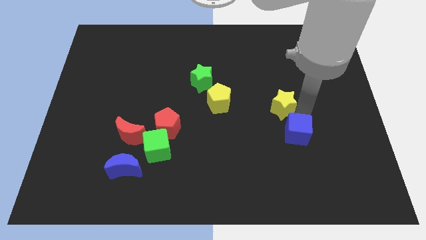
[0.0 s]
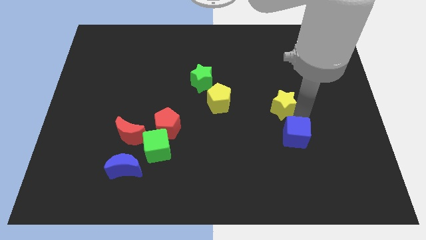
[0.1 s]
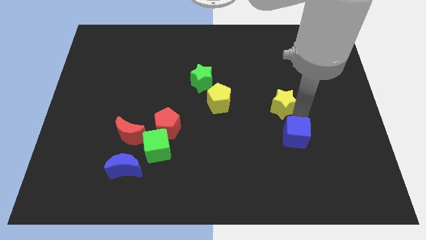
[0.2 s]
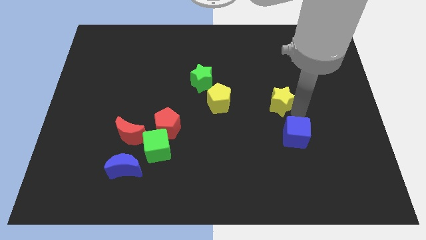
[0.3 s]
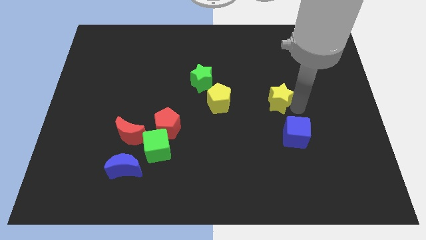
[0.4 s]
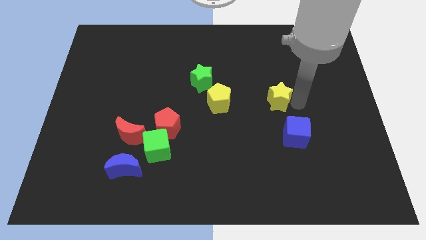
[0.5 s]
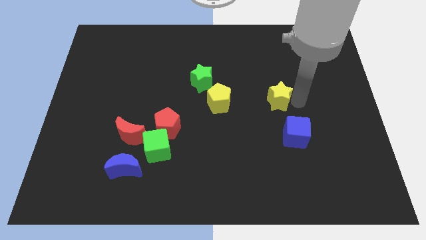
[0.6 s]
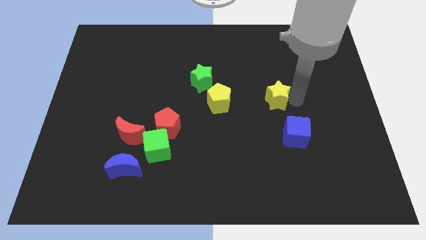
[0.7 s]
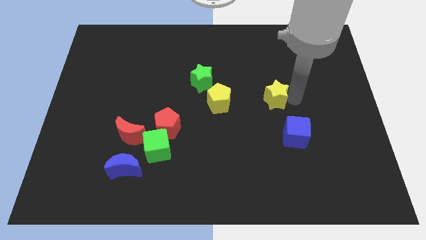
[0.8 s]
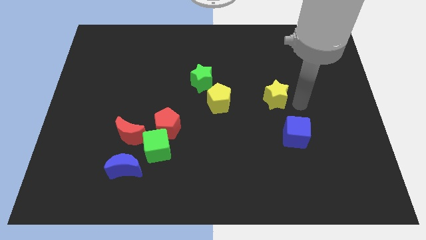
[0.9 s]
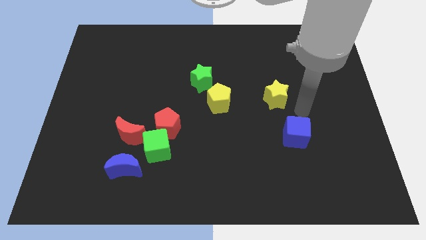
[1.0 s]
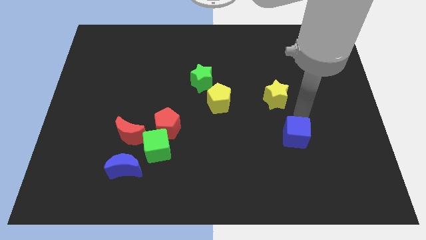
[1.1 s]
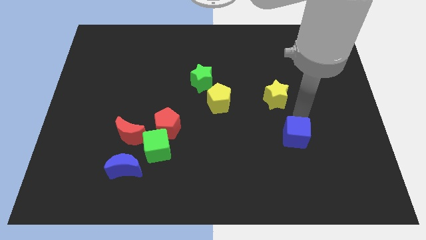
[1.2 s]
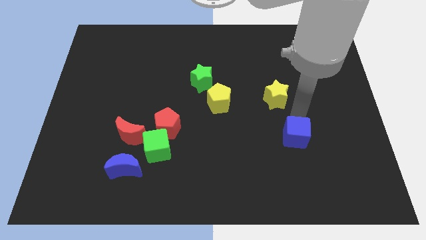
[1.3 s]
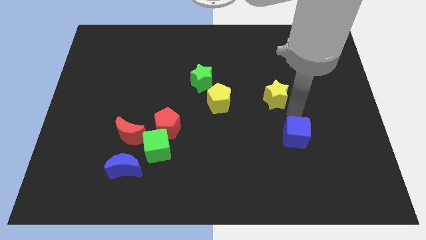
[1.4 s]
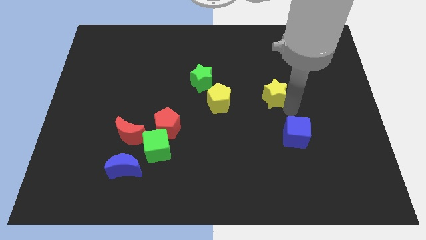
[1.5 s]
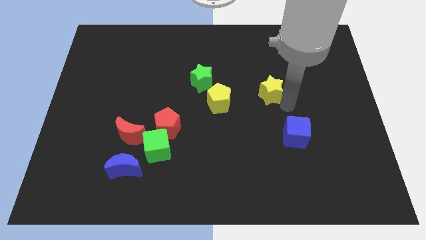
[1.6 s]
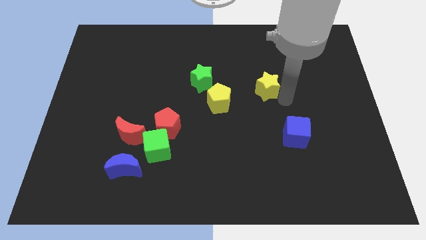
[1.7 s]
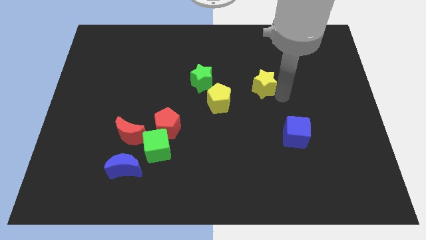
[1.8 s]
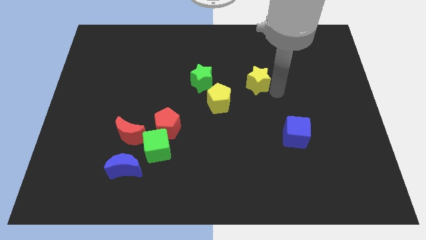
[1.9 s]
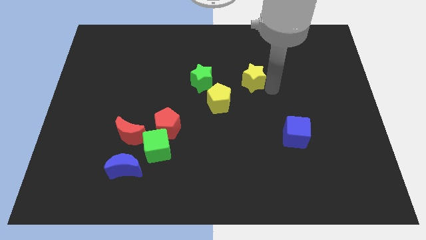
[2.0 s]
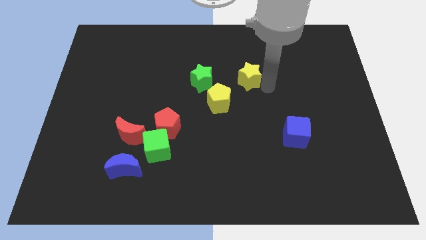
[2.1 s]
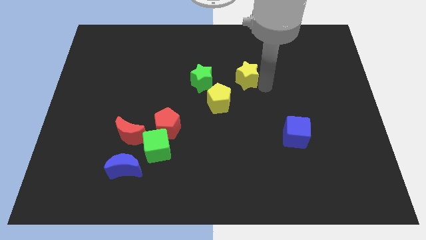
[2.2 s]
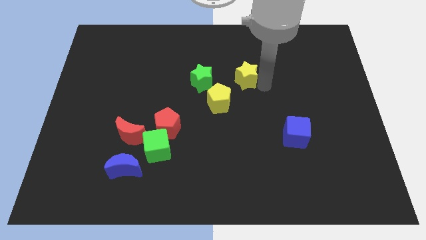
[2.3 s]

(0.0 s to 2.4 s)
push the yellow star to the right of the green star

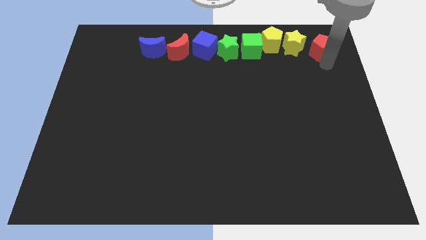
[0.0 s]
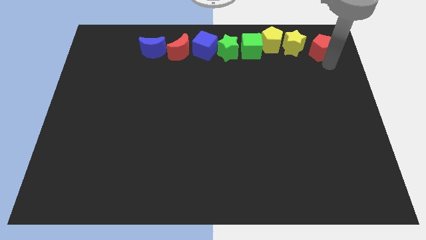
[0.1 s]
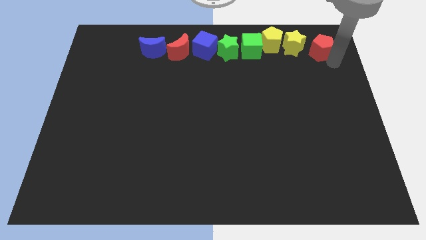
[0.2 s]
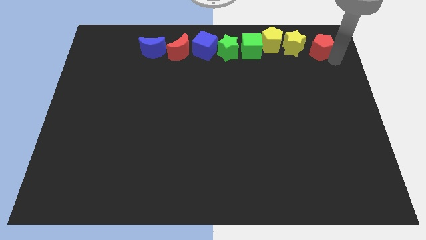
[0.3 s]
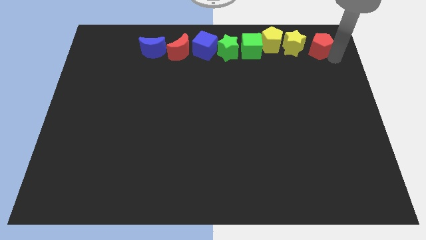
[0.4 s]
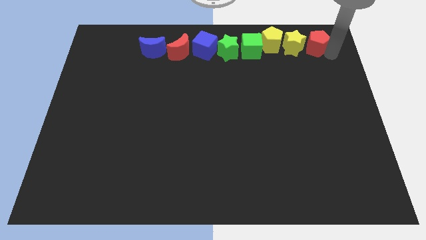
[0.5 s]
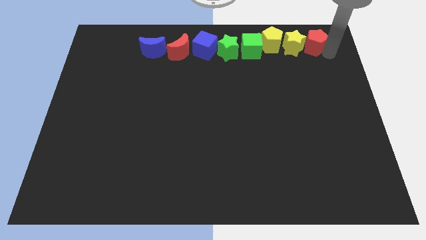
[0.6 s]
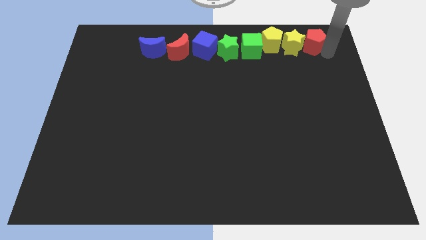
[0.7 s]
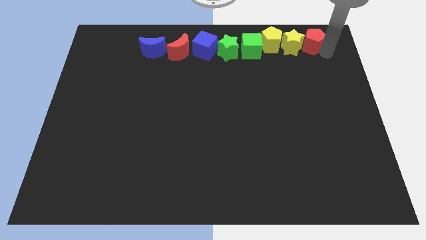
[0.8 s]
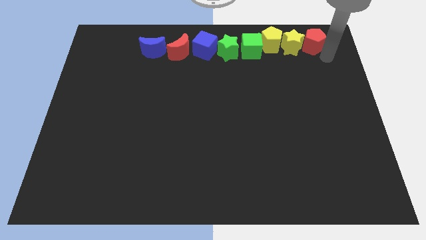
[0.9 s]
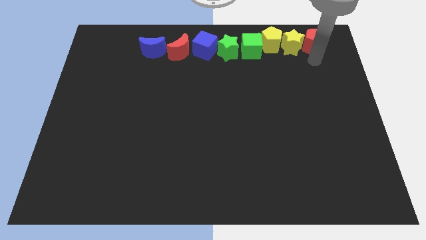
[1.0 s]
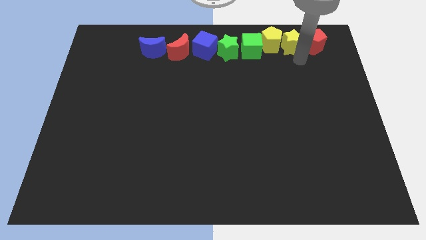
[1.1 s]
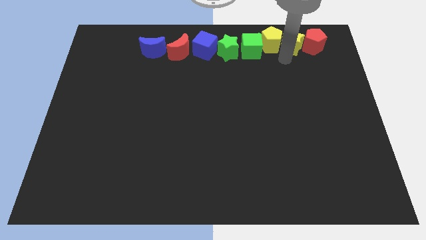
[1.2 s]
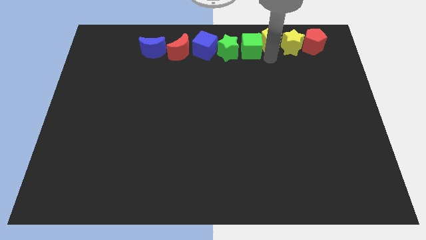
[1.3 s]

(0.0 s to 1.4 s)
place the red pentagon towards the right side of the yellow star

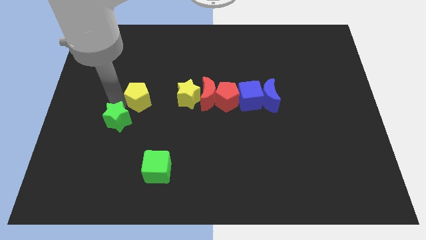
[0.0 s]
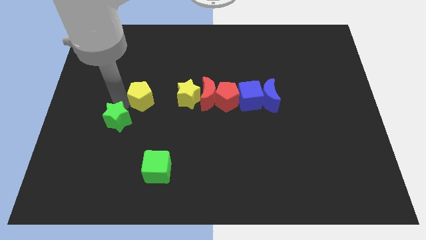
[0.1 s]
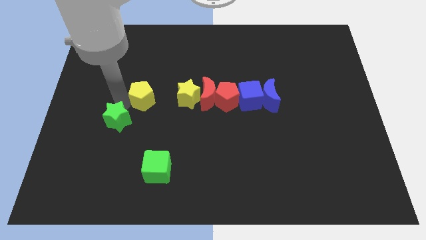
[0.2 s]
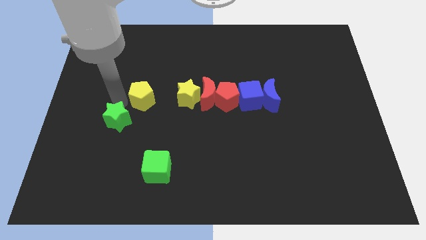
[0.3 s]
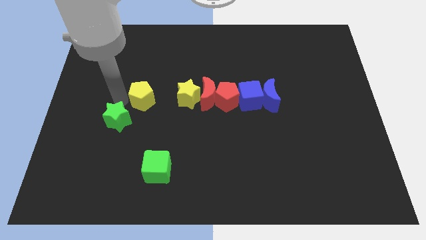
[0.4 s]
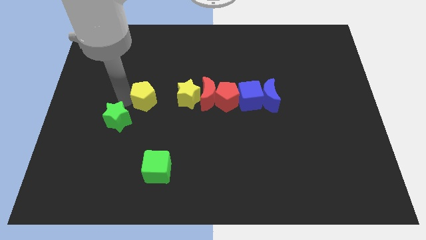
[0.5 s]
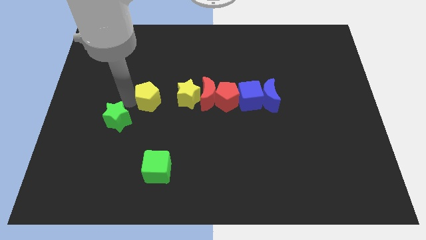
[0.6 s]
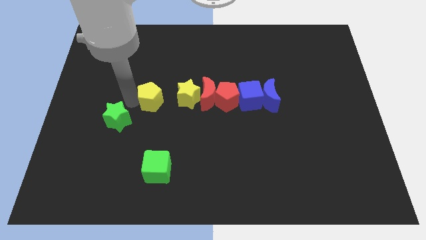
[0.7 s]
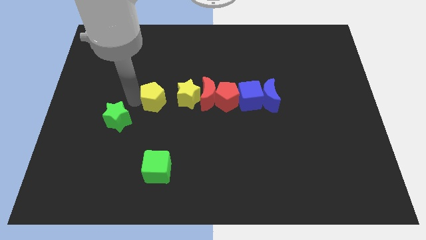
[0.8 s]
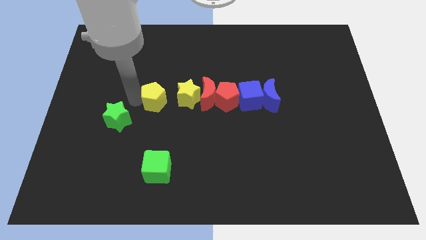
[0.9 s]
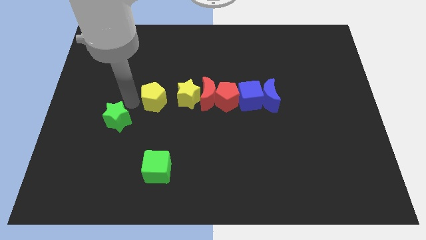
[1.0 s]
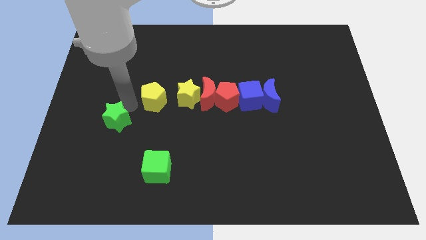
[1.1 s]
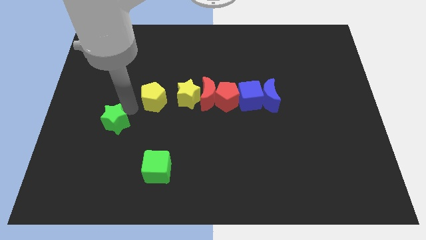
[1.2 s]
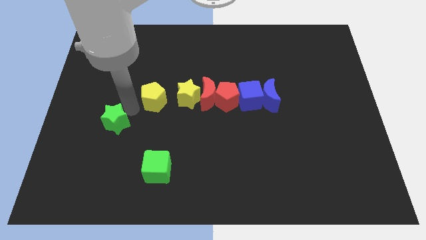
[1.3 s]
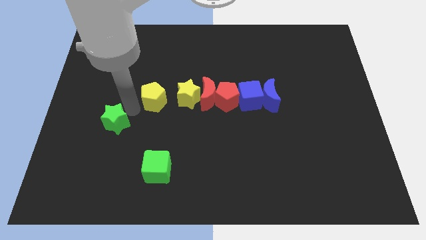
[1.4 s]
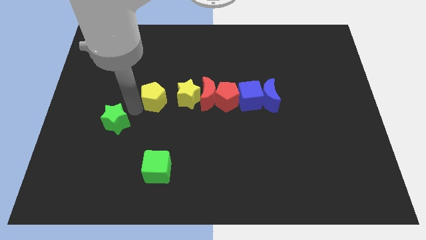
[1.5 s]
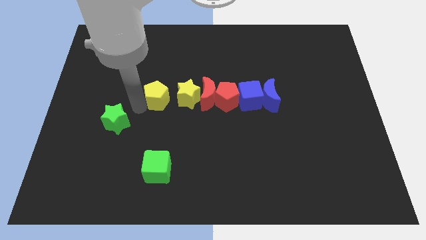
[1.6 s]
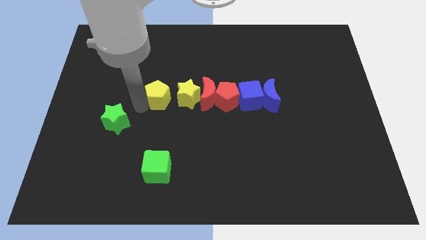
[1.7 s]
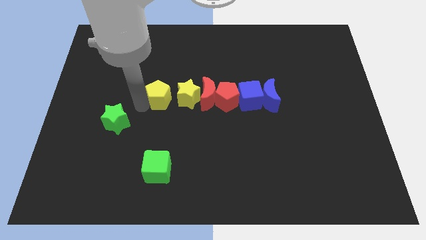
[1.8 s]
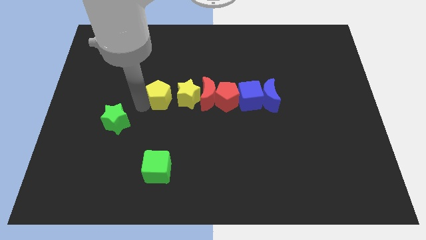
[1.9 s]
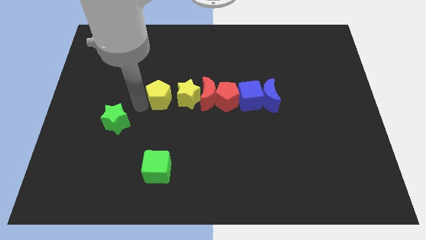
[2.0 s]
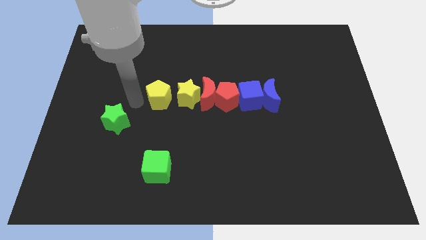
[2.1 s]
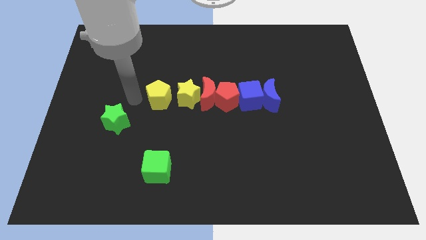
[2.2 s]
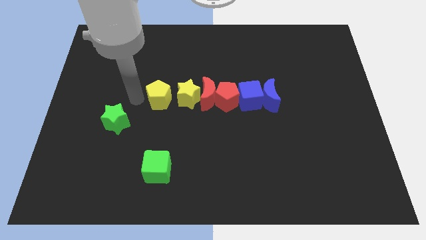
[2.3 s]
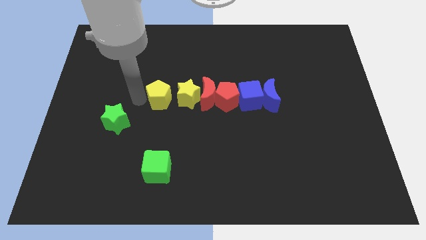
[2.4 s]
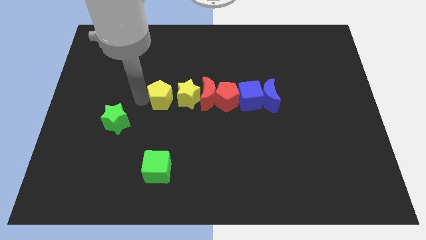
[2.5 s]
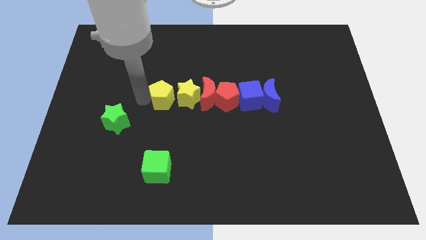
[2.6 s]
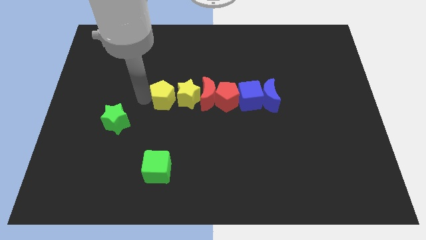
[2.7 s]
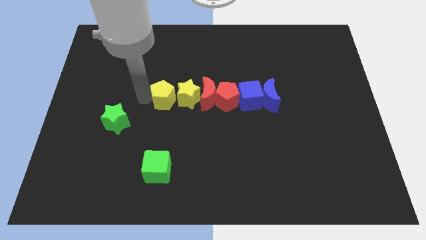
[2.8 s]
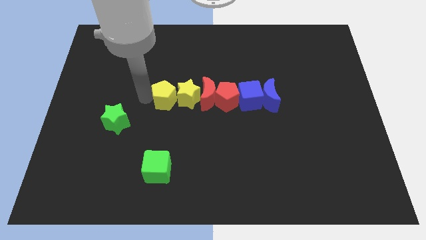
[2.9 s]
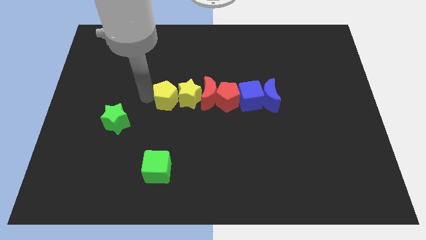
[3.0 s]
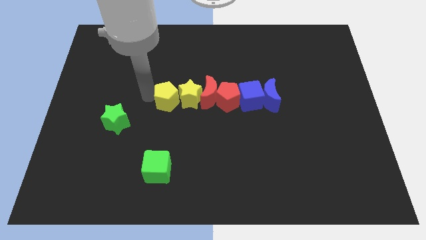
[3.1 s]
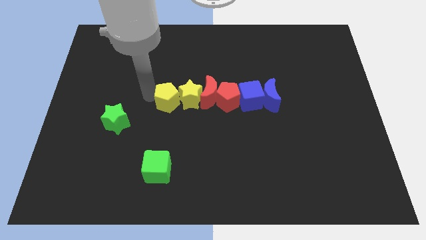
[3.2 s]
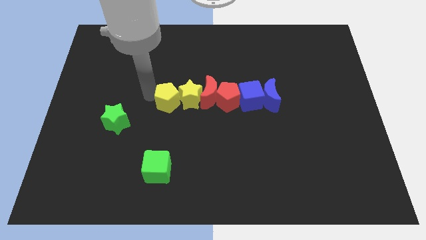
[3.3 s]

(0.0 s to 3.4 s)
push the yellow pentagon into the left side of yellow star

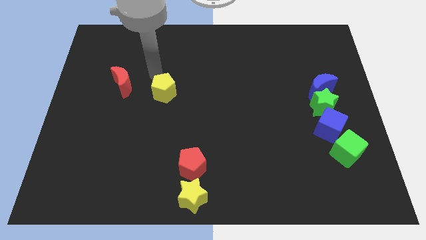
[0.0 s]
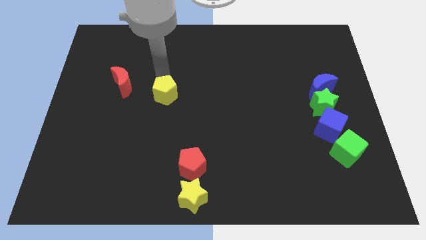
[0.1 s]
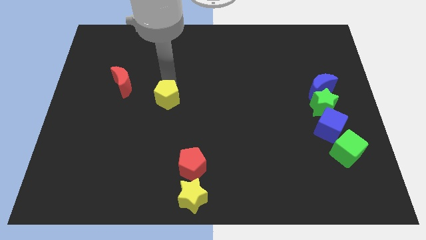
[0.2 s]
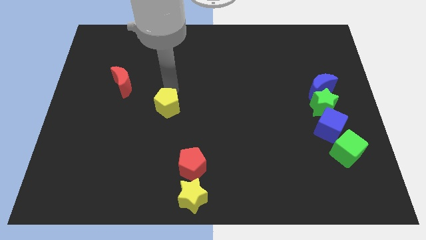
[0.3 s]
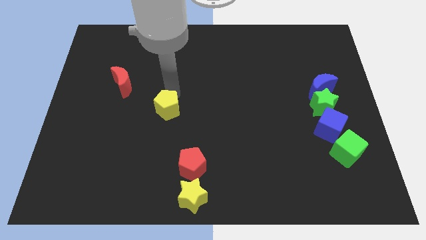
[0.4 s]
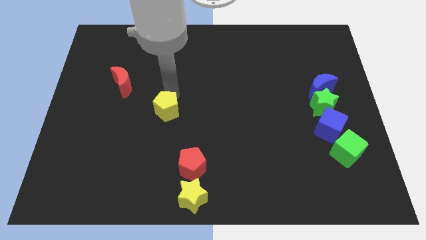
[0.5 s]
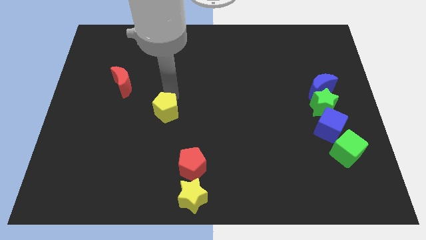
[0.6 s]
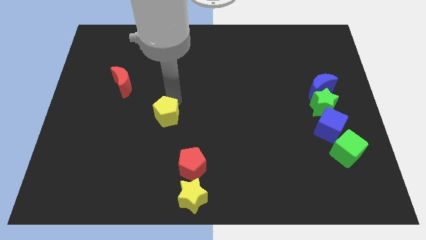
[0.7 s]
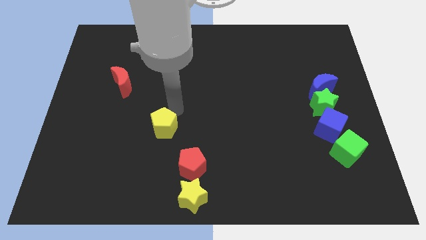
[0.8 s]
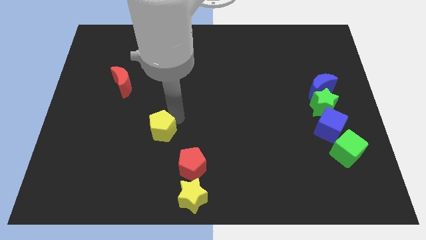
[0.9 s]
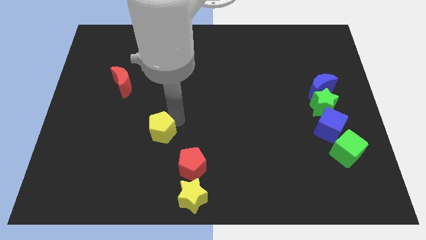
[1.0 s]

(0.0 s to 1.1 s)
push the yellow pentagon diagonal top left to the red pentagon

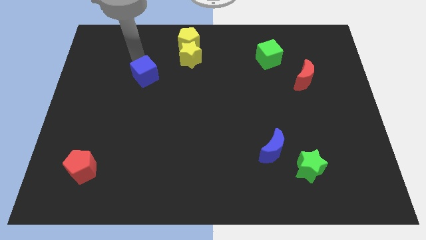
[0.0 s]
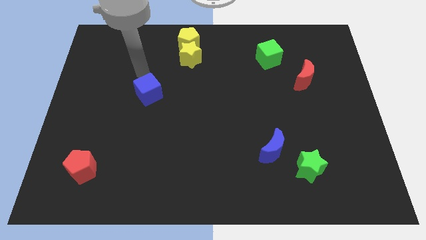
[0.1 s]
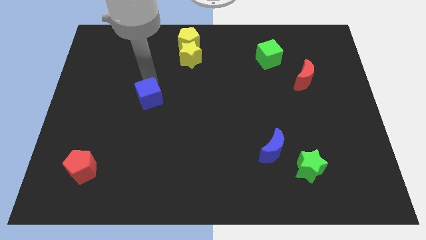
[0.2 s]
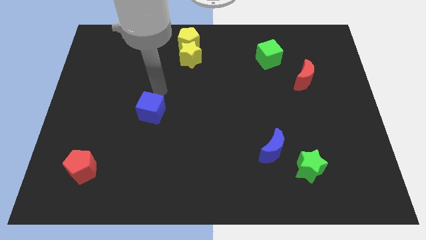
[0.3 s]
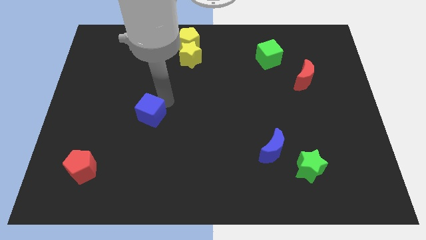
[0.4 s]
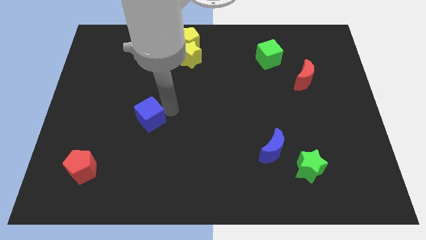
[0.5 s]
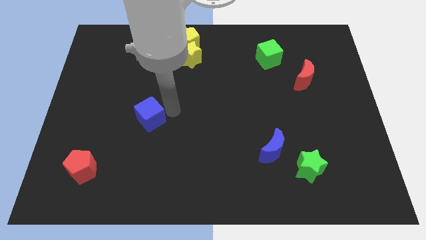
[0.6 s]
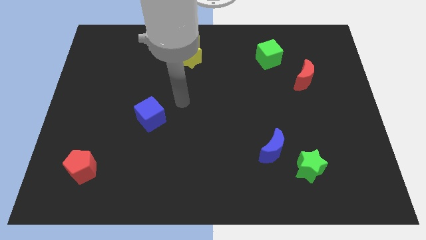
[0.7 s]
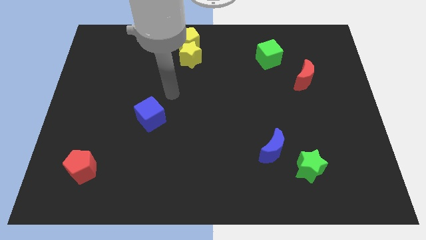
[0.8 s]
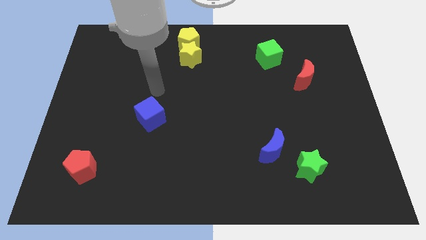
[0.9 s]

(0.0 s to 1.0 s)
push the blue cube slightly downwards
